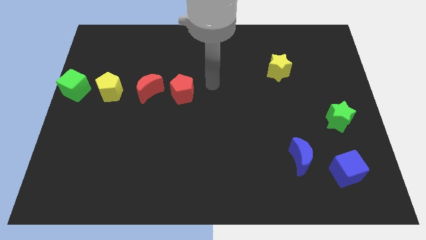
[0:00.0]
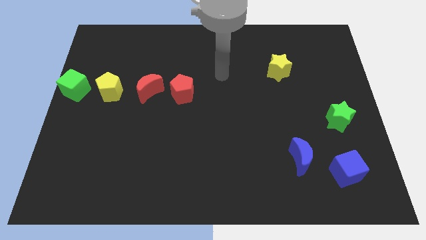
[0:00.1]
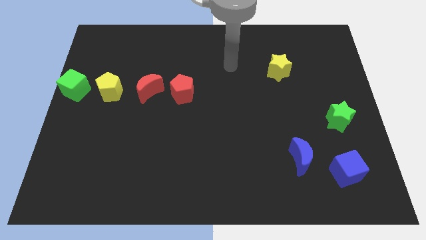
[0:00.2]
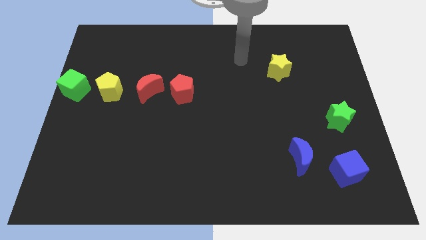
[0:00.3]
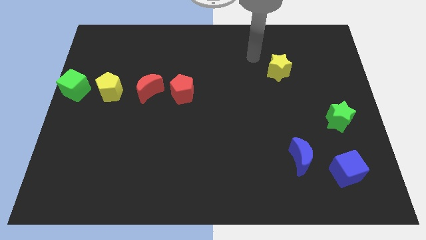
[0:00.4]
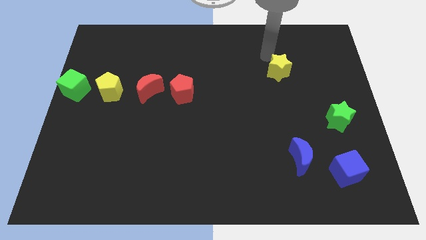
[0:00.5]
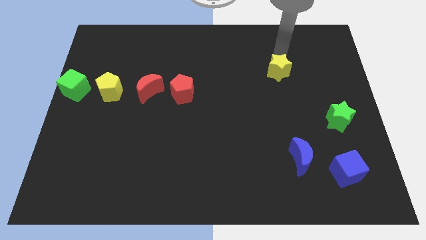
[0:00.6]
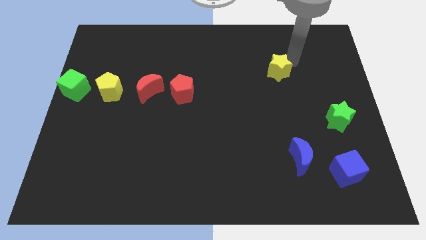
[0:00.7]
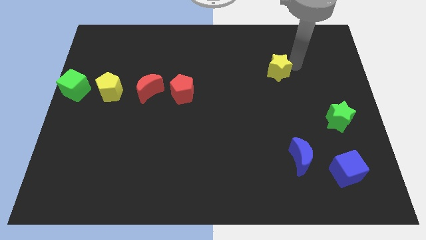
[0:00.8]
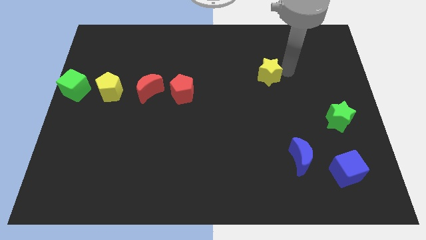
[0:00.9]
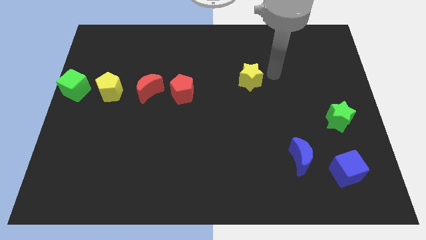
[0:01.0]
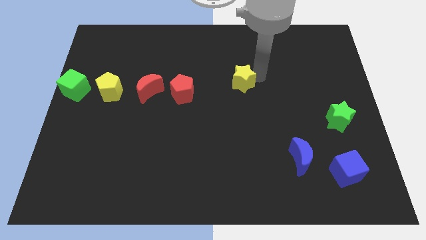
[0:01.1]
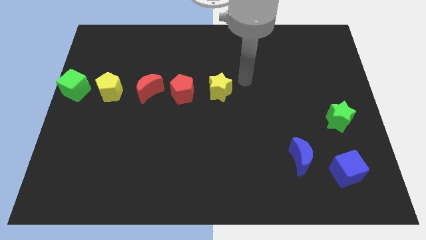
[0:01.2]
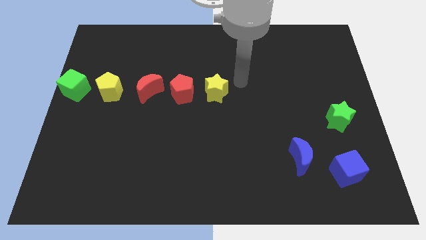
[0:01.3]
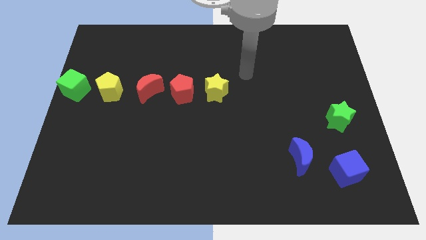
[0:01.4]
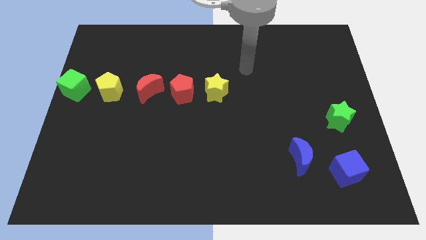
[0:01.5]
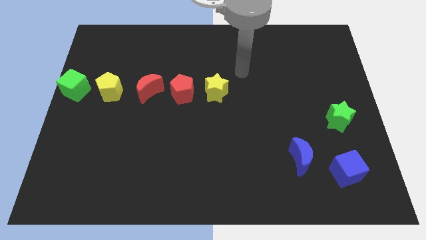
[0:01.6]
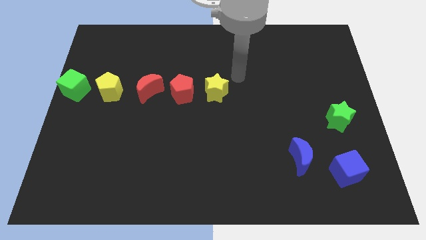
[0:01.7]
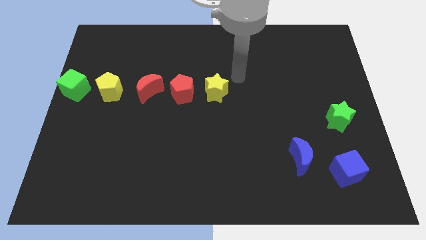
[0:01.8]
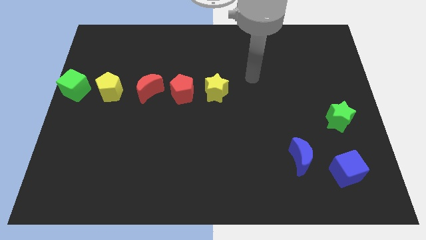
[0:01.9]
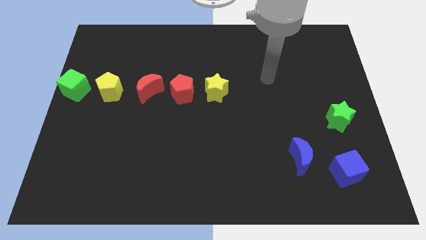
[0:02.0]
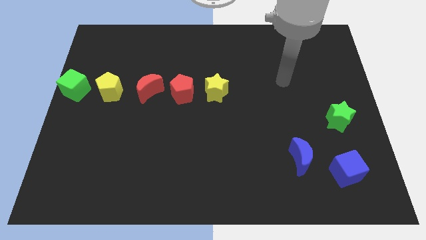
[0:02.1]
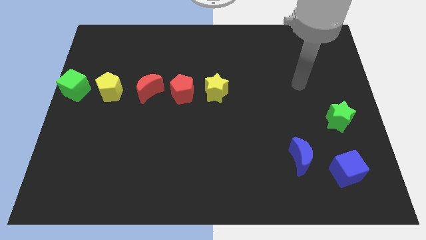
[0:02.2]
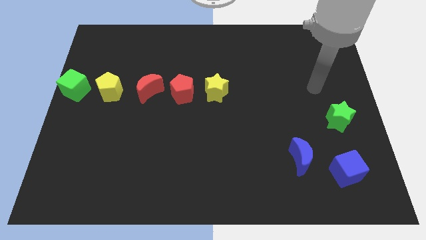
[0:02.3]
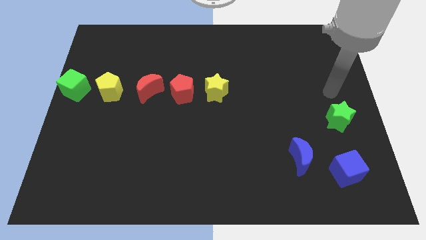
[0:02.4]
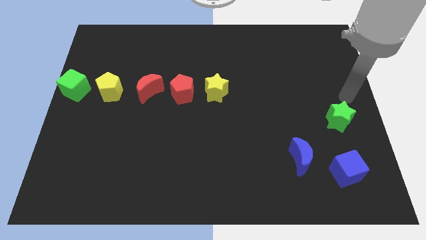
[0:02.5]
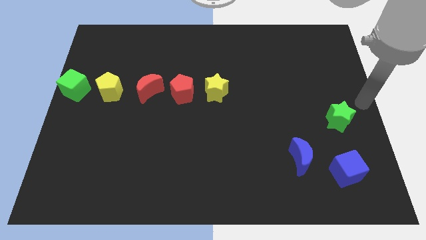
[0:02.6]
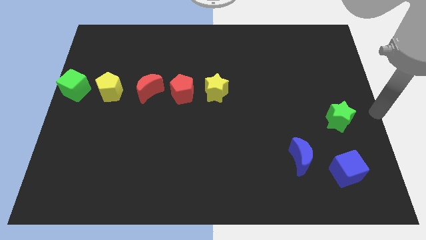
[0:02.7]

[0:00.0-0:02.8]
put the yellow star at the center of the board

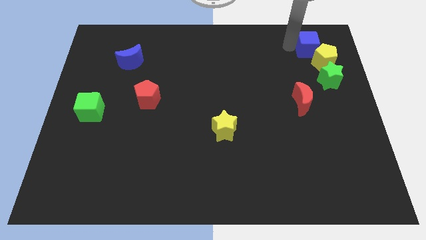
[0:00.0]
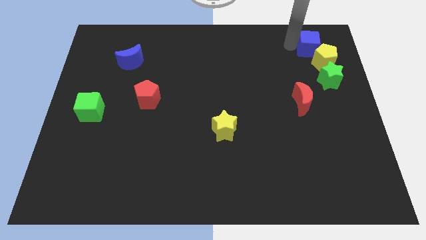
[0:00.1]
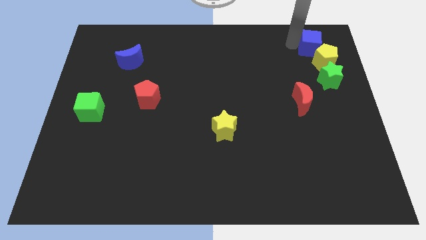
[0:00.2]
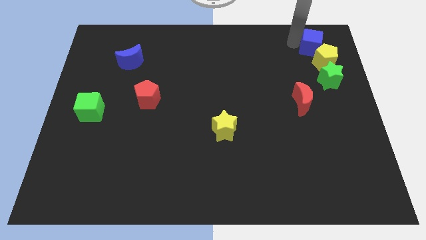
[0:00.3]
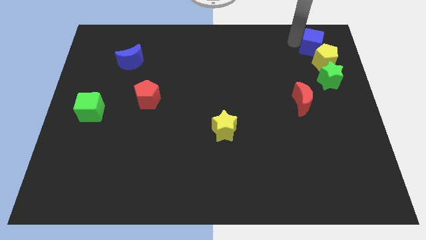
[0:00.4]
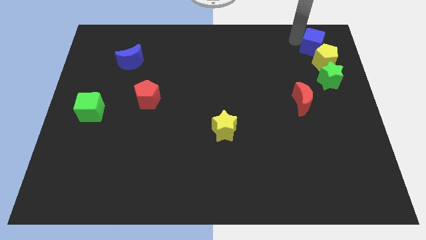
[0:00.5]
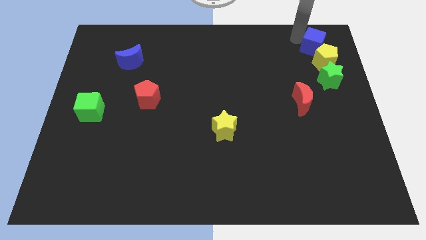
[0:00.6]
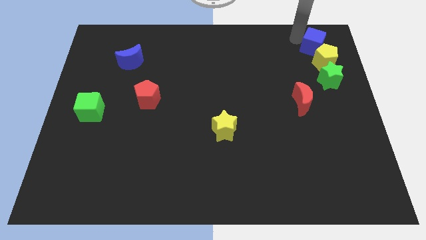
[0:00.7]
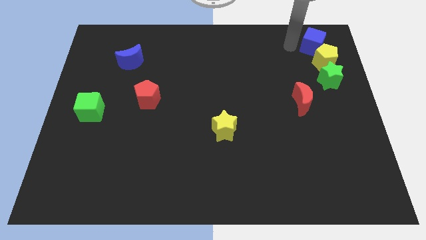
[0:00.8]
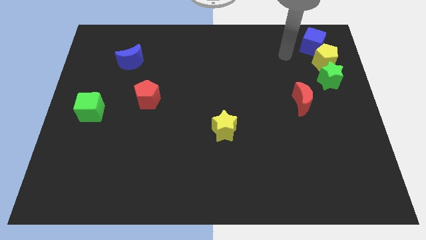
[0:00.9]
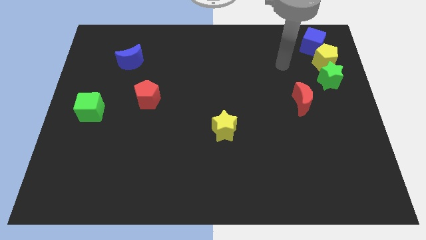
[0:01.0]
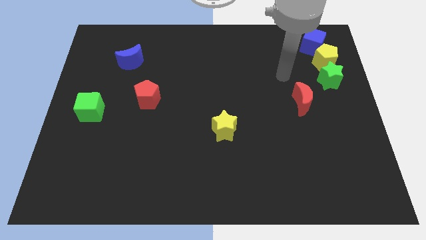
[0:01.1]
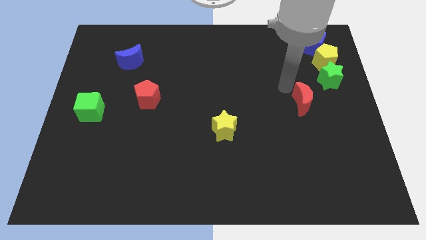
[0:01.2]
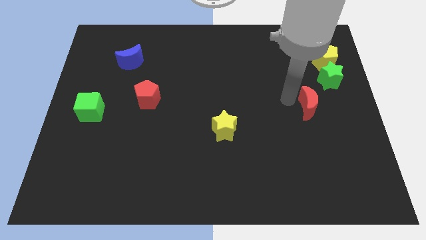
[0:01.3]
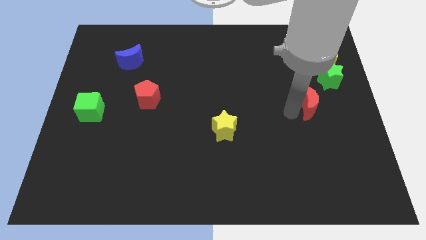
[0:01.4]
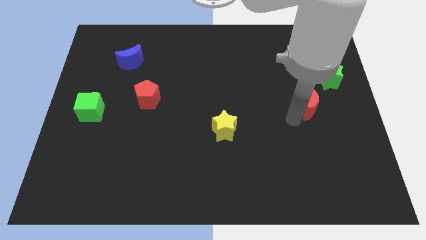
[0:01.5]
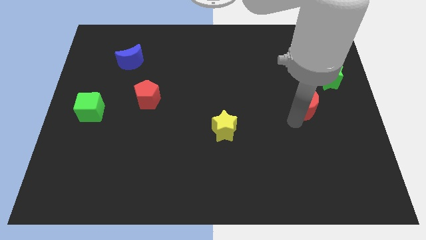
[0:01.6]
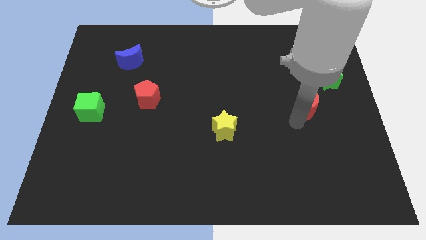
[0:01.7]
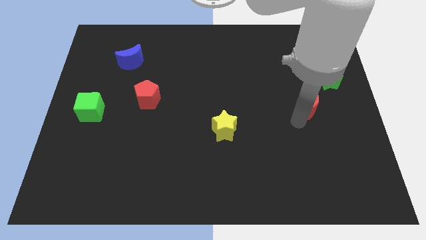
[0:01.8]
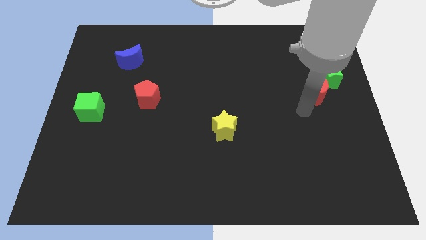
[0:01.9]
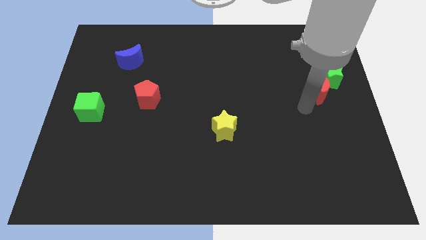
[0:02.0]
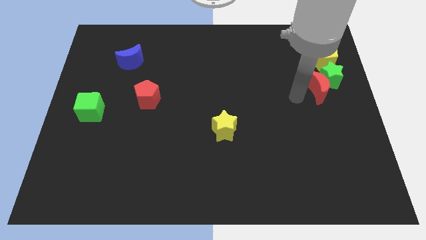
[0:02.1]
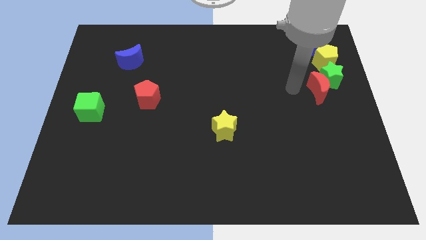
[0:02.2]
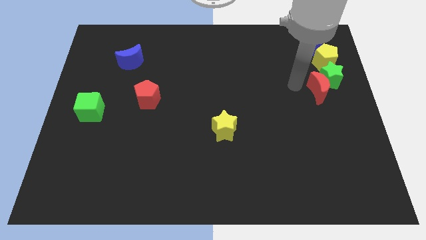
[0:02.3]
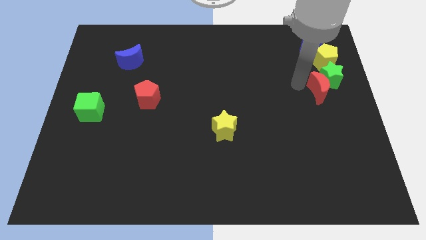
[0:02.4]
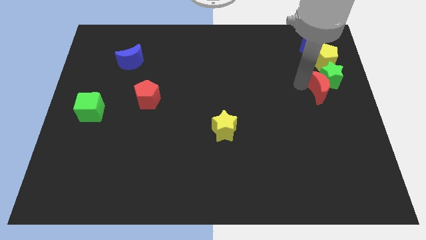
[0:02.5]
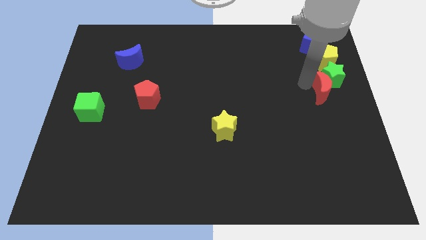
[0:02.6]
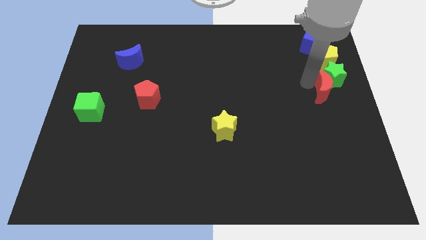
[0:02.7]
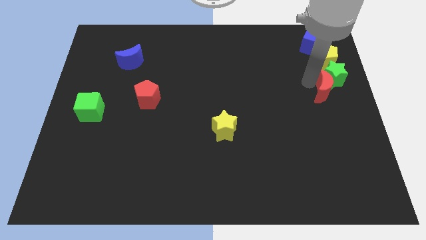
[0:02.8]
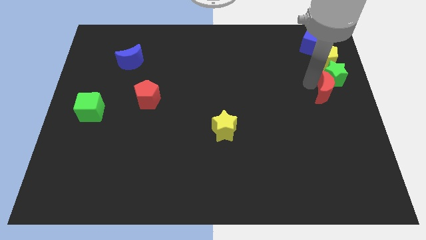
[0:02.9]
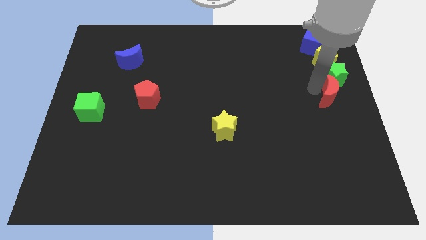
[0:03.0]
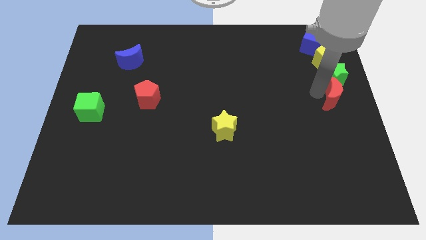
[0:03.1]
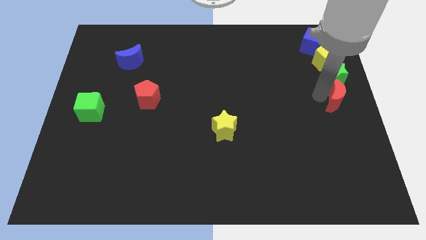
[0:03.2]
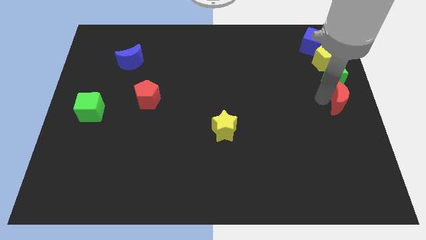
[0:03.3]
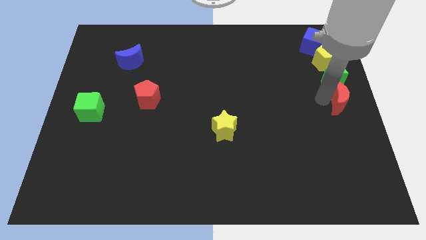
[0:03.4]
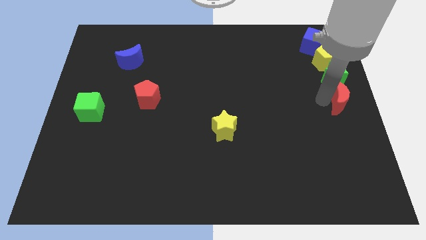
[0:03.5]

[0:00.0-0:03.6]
place red crescent below green star

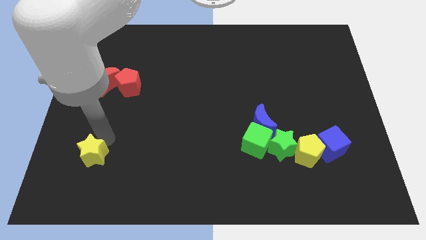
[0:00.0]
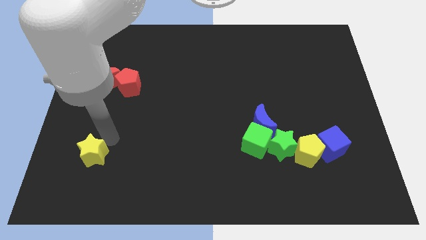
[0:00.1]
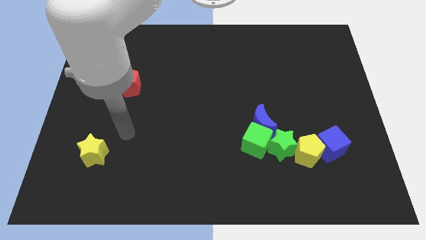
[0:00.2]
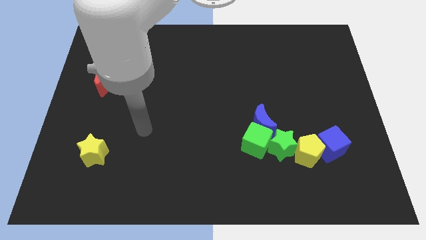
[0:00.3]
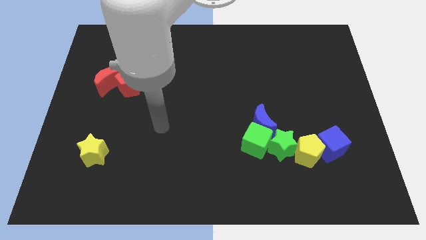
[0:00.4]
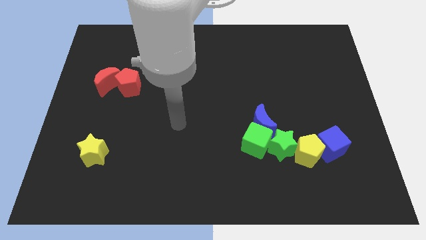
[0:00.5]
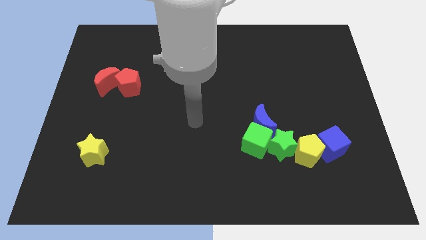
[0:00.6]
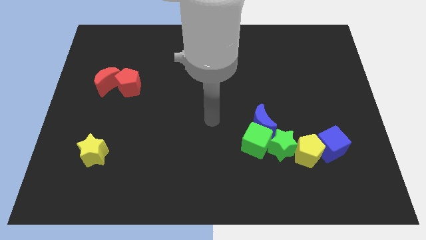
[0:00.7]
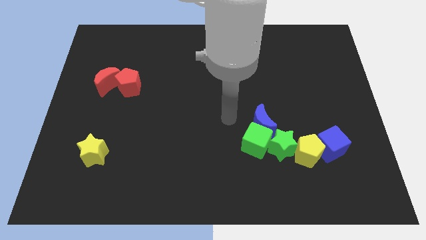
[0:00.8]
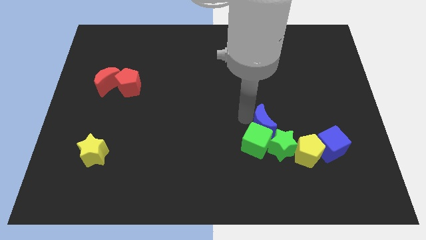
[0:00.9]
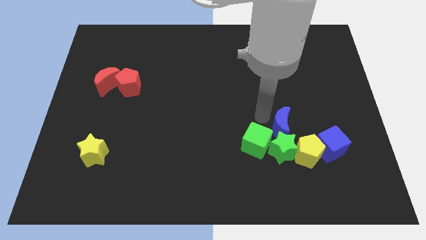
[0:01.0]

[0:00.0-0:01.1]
move the blue crescent slightly to the right

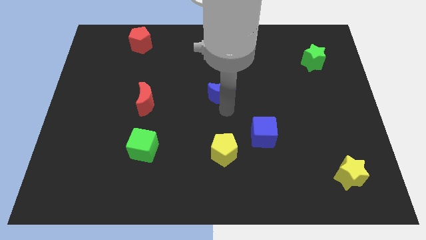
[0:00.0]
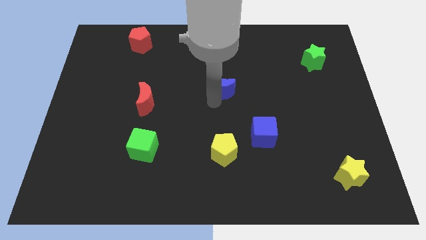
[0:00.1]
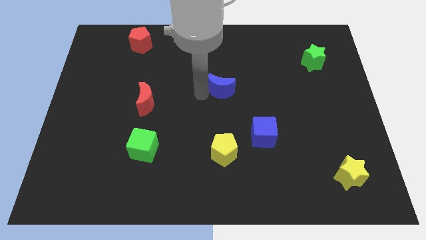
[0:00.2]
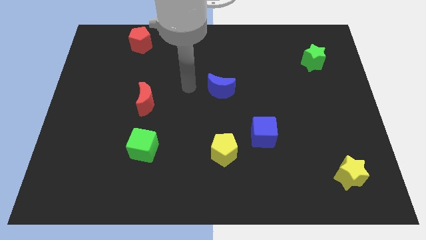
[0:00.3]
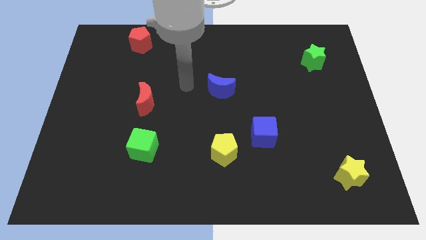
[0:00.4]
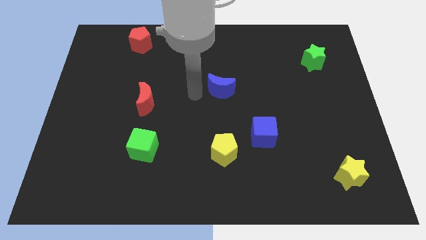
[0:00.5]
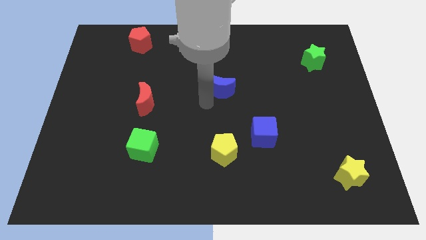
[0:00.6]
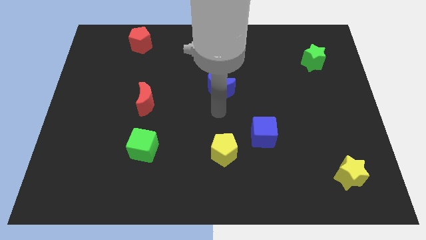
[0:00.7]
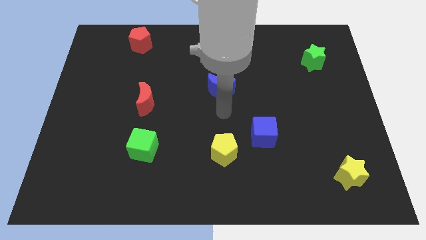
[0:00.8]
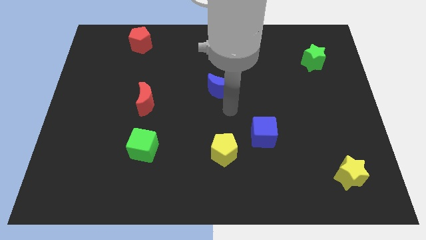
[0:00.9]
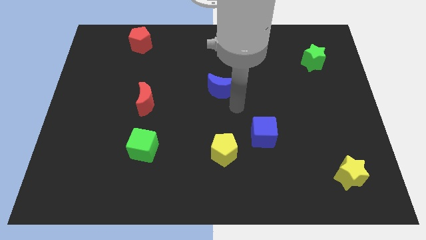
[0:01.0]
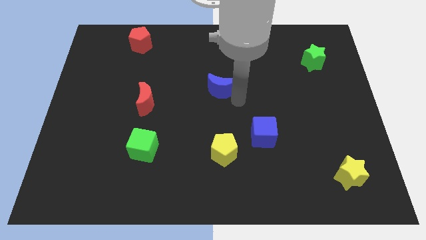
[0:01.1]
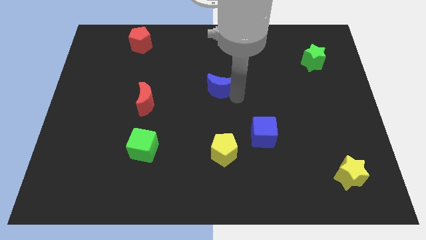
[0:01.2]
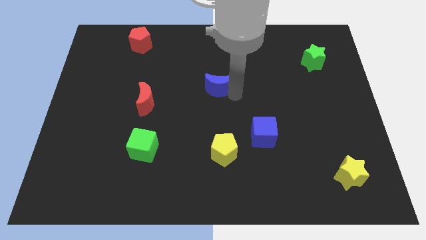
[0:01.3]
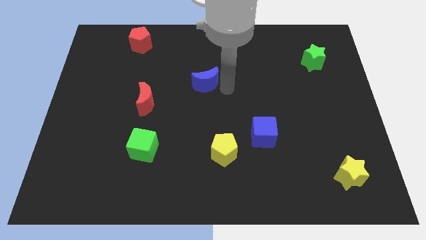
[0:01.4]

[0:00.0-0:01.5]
move the blue moon to the center

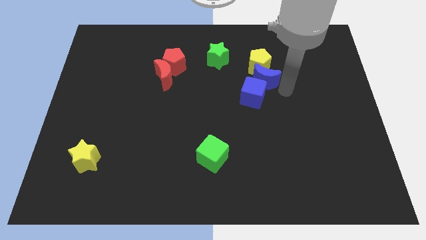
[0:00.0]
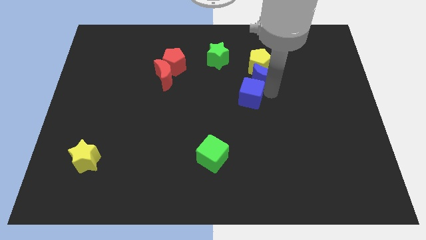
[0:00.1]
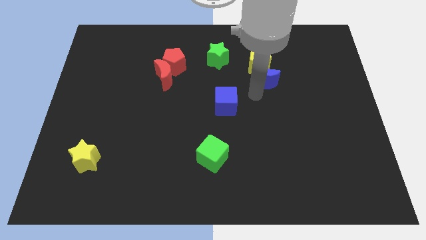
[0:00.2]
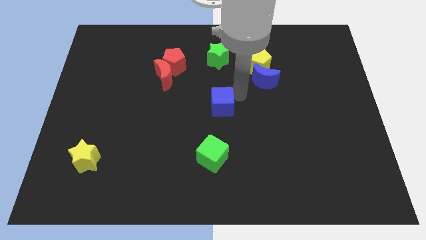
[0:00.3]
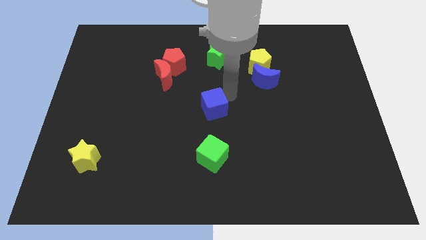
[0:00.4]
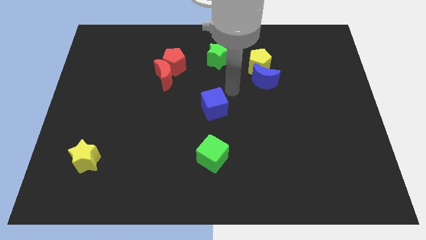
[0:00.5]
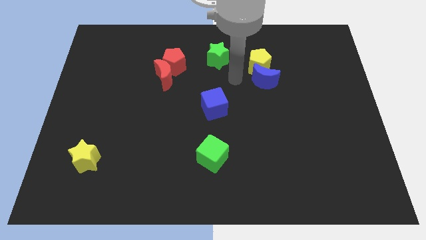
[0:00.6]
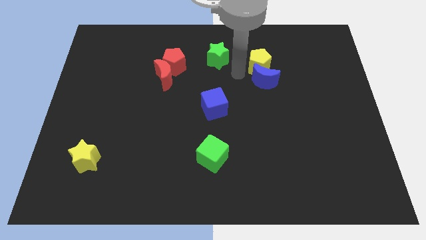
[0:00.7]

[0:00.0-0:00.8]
place the blue cube at the center of the board
